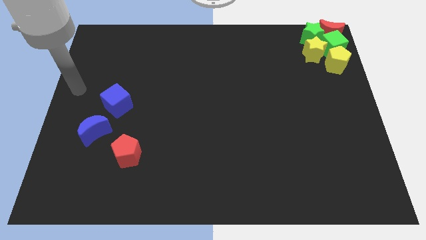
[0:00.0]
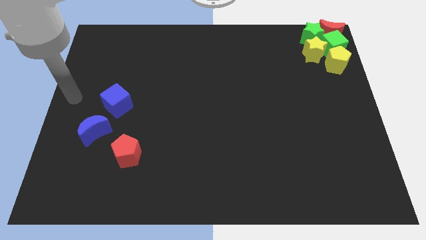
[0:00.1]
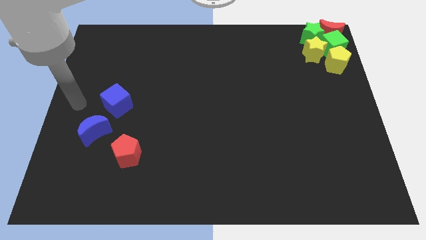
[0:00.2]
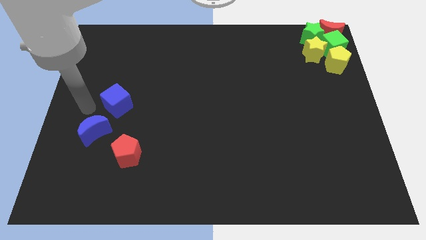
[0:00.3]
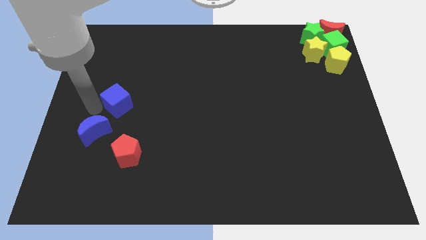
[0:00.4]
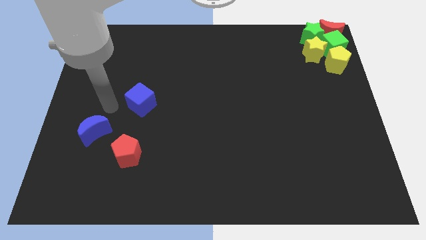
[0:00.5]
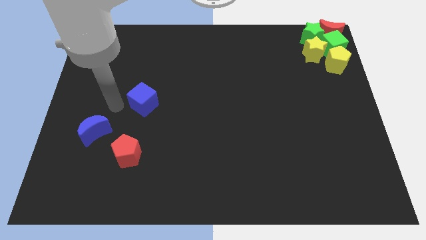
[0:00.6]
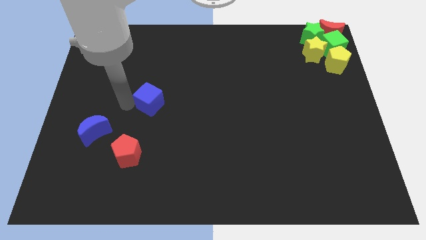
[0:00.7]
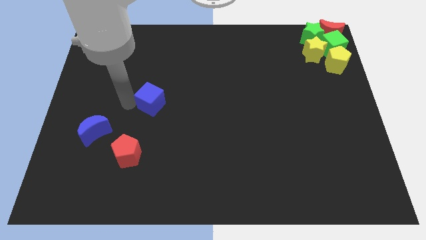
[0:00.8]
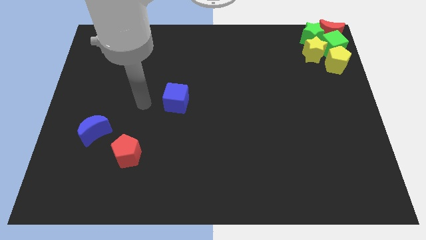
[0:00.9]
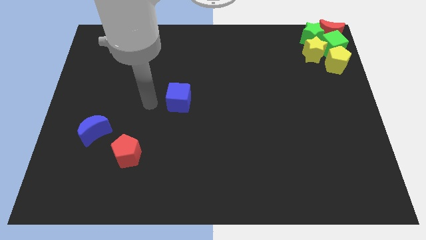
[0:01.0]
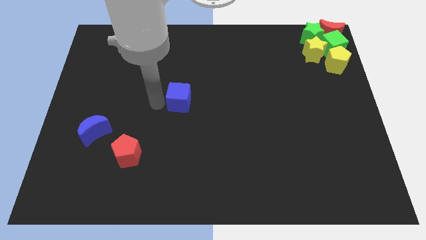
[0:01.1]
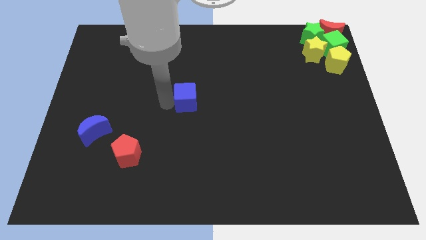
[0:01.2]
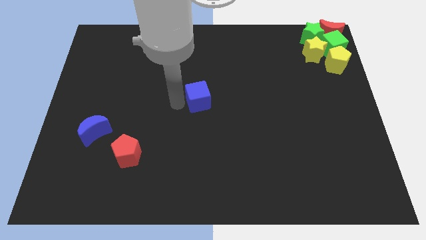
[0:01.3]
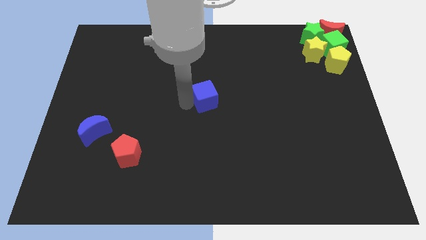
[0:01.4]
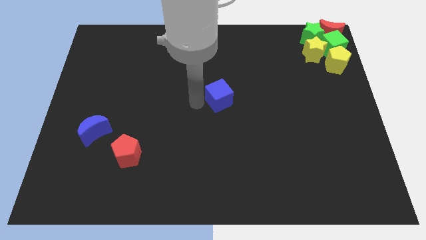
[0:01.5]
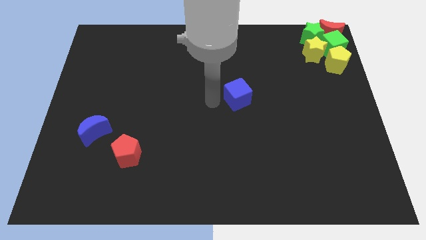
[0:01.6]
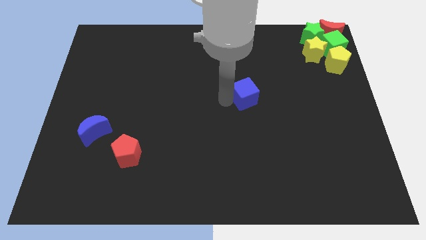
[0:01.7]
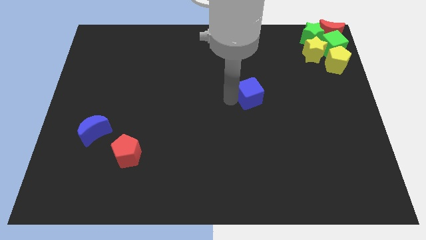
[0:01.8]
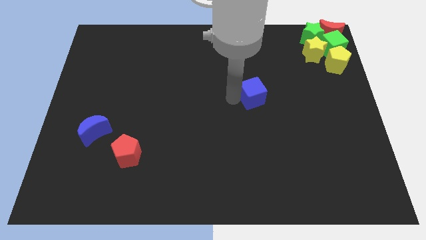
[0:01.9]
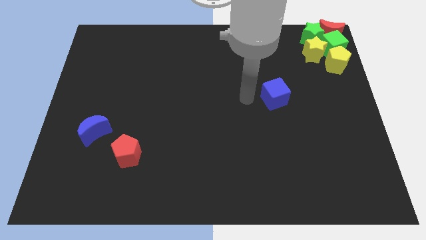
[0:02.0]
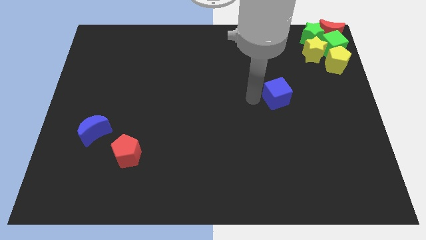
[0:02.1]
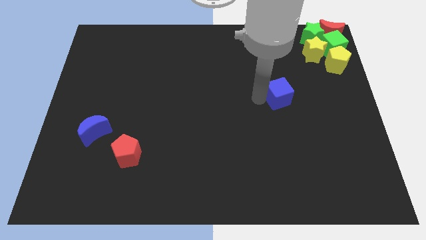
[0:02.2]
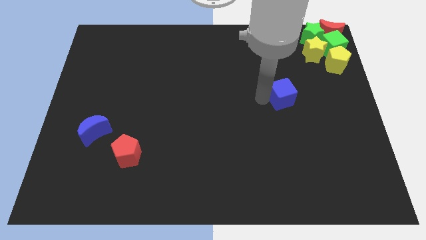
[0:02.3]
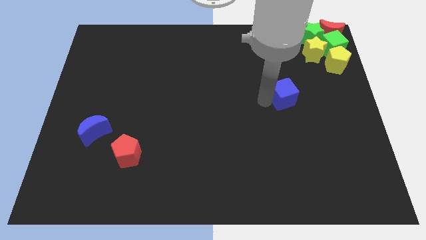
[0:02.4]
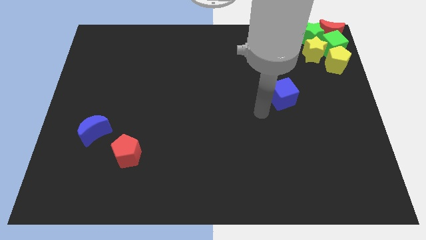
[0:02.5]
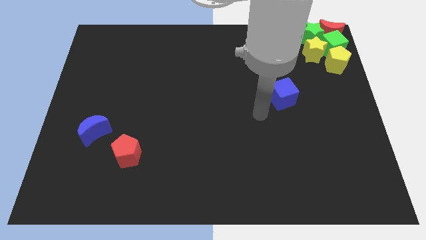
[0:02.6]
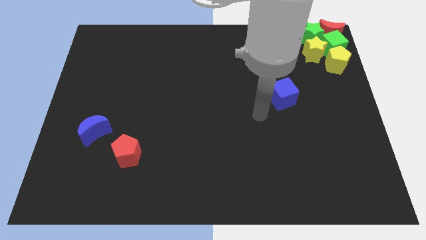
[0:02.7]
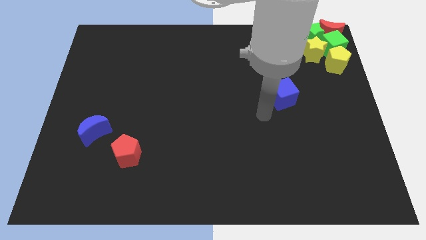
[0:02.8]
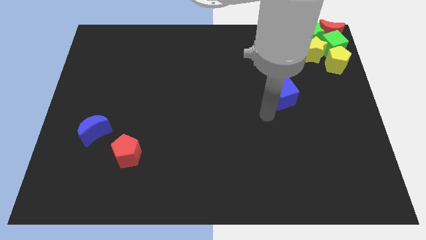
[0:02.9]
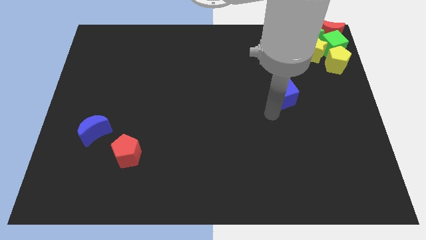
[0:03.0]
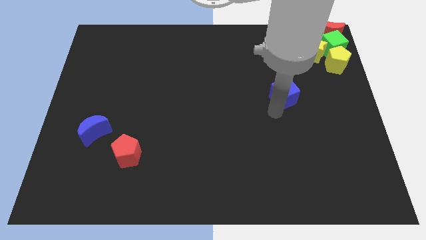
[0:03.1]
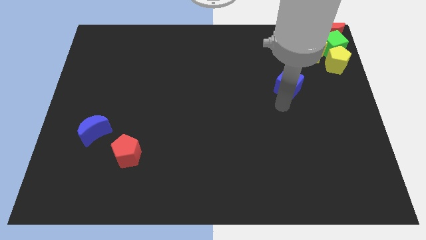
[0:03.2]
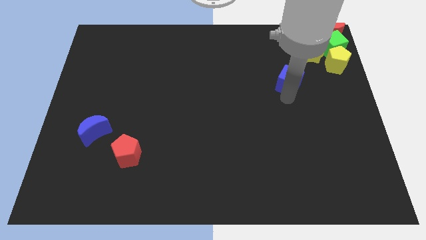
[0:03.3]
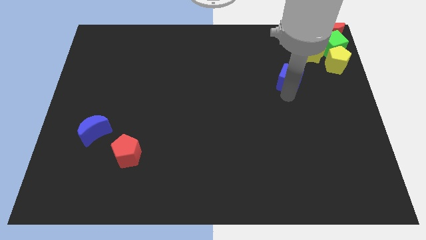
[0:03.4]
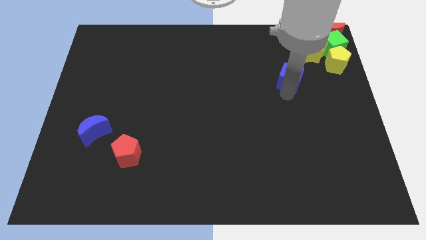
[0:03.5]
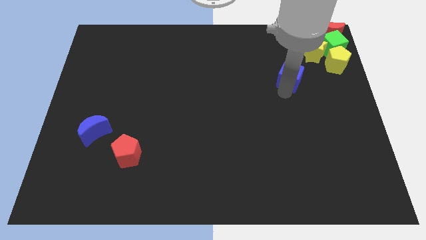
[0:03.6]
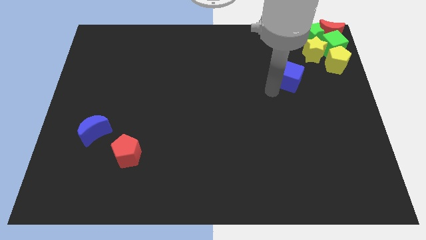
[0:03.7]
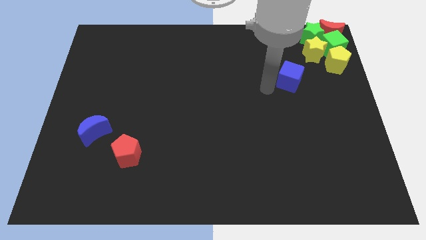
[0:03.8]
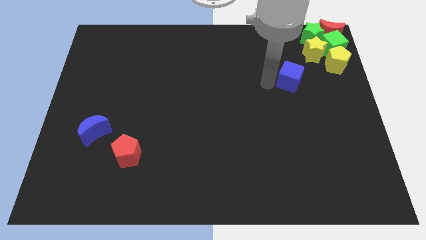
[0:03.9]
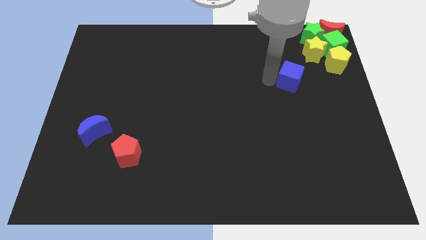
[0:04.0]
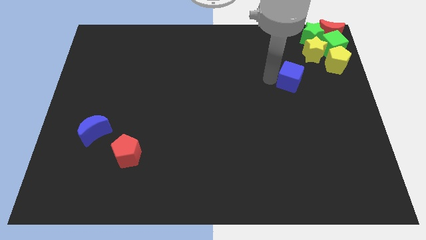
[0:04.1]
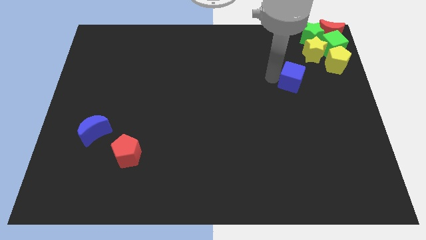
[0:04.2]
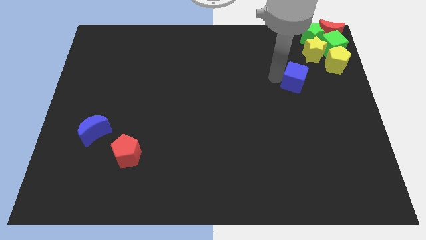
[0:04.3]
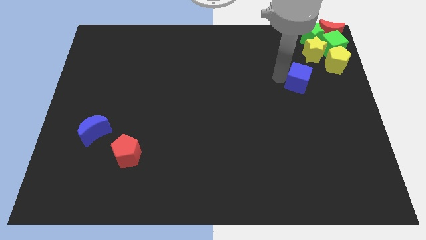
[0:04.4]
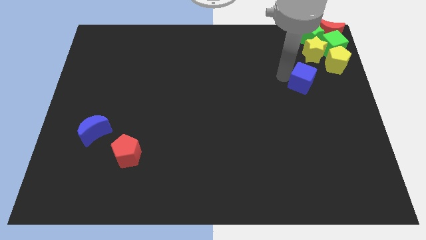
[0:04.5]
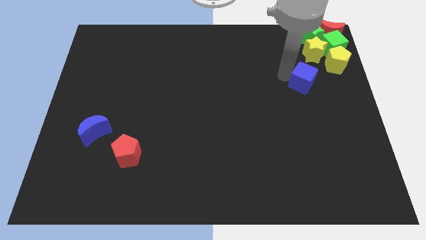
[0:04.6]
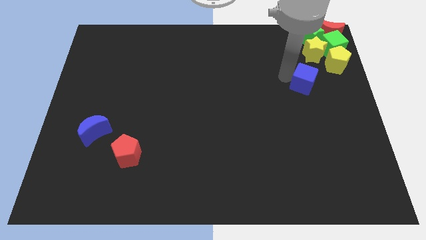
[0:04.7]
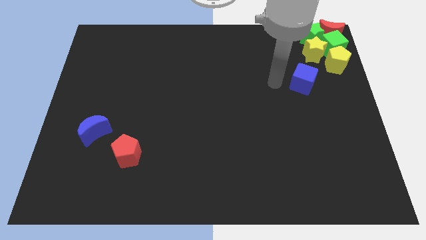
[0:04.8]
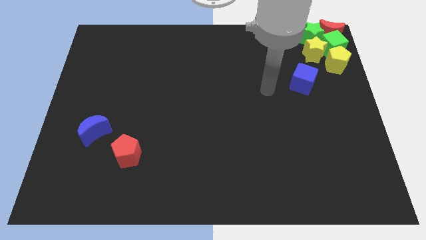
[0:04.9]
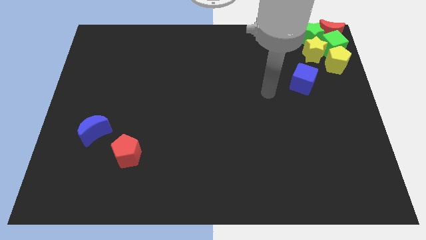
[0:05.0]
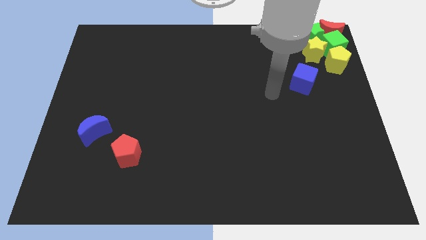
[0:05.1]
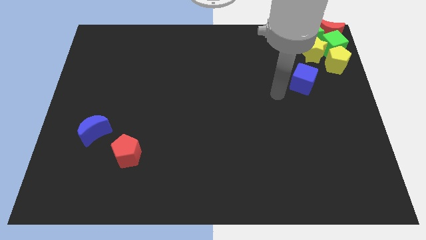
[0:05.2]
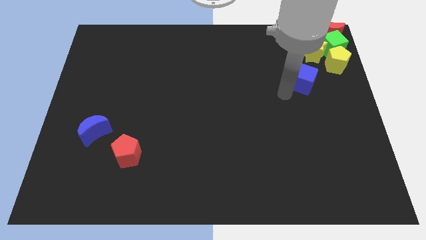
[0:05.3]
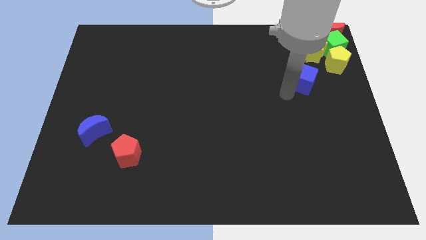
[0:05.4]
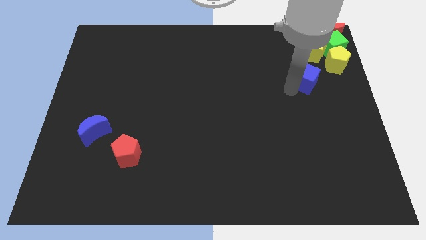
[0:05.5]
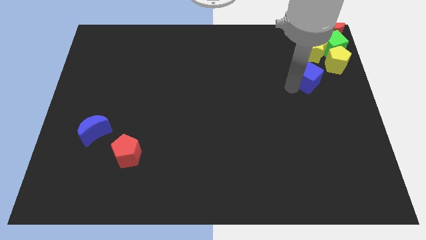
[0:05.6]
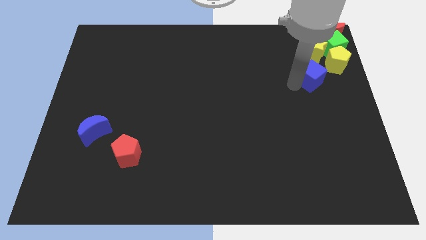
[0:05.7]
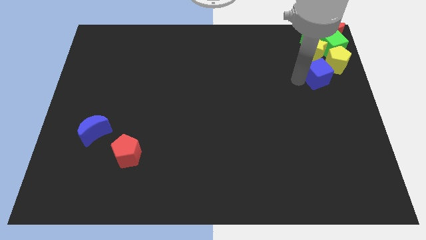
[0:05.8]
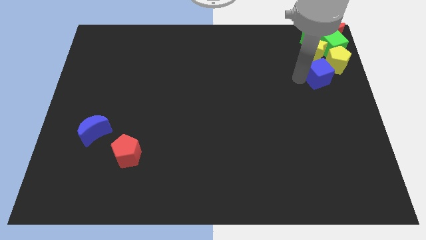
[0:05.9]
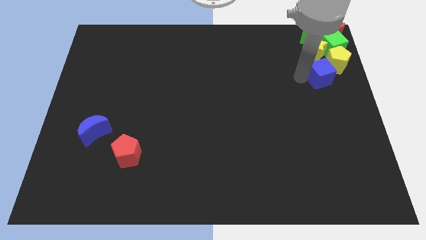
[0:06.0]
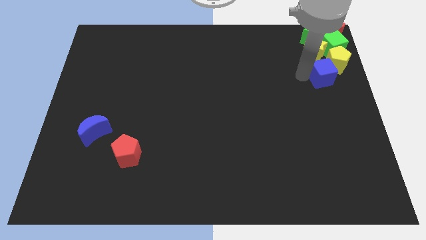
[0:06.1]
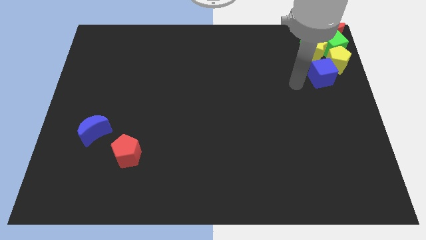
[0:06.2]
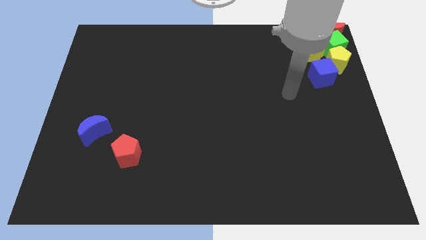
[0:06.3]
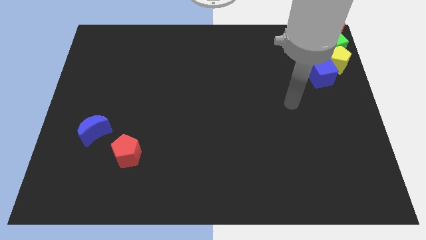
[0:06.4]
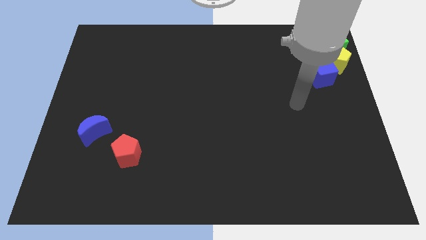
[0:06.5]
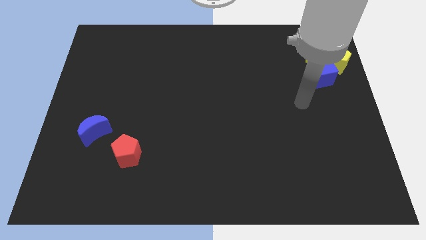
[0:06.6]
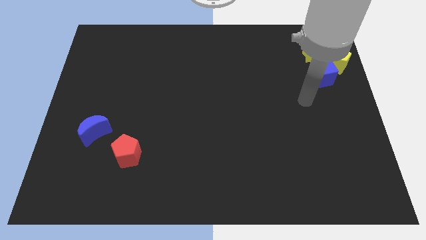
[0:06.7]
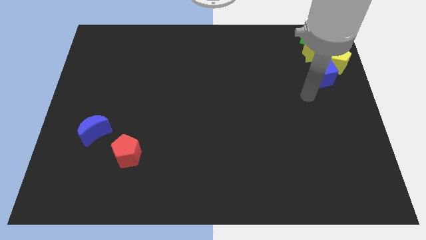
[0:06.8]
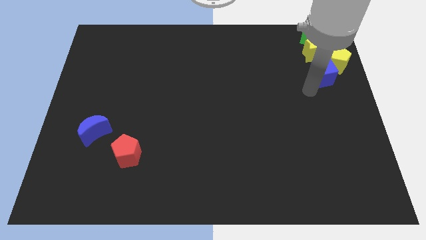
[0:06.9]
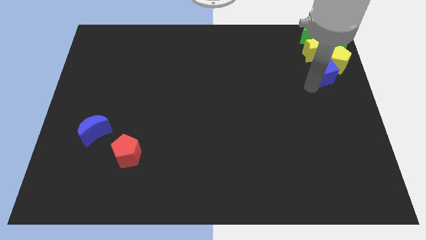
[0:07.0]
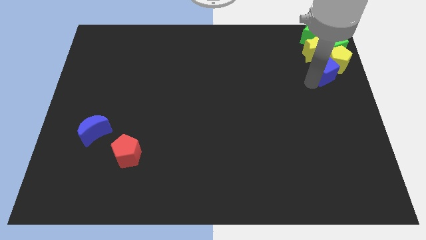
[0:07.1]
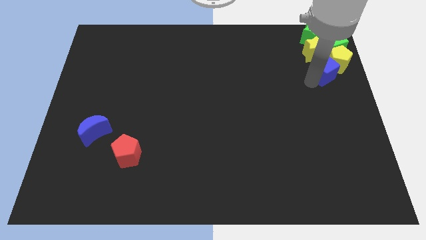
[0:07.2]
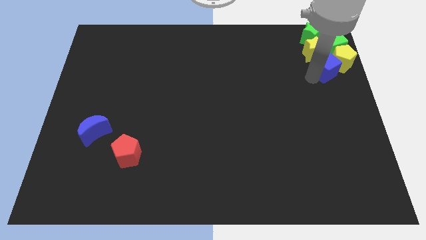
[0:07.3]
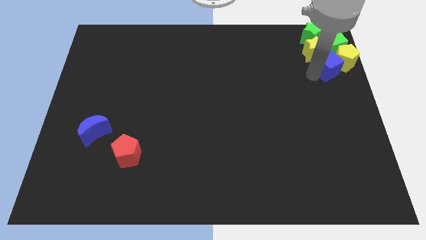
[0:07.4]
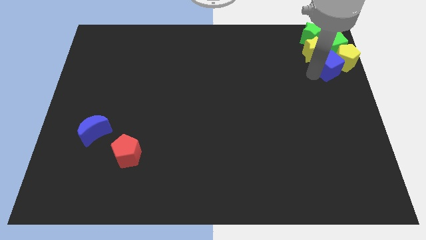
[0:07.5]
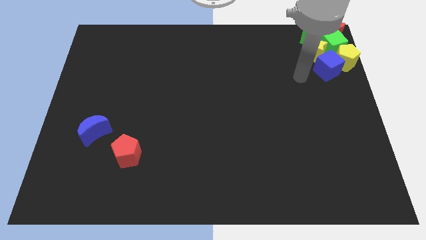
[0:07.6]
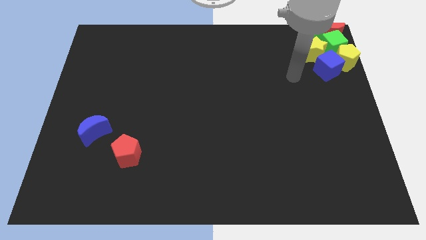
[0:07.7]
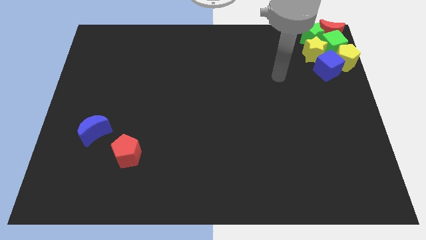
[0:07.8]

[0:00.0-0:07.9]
push the blue cube into the yellow pentagon

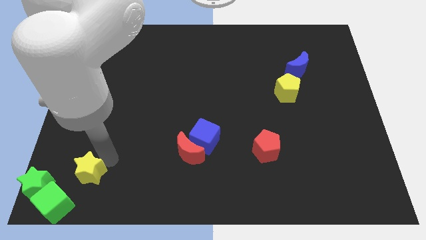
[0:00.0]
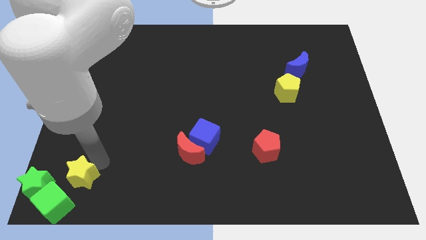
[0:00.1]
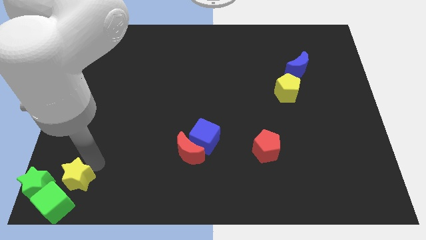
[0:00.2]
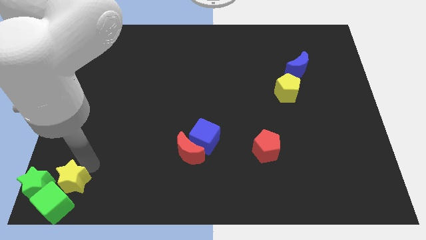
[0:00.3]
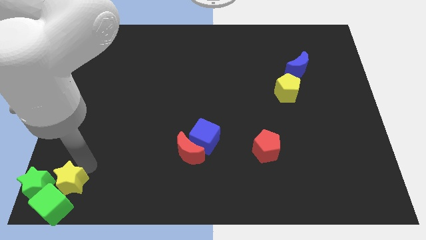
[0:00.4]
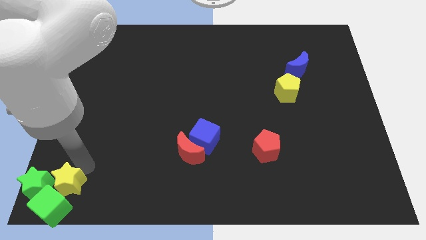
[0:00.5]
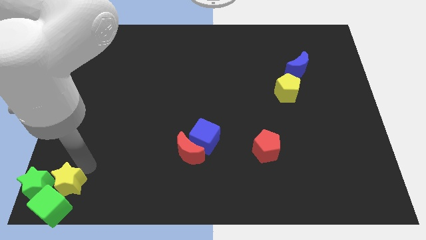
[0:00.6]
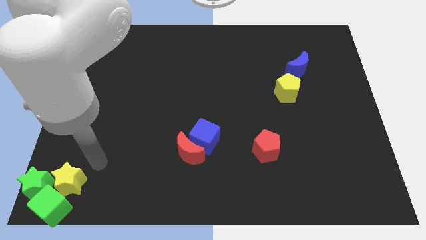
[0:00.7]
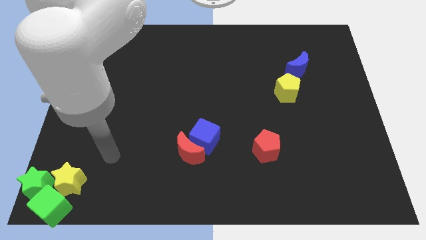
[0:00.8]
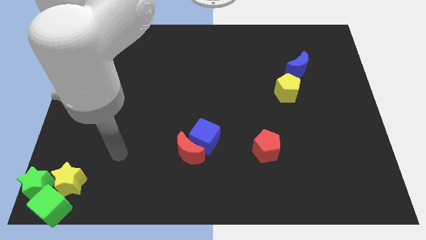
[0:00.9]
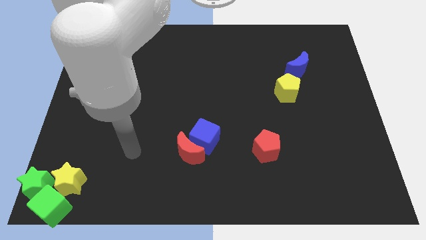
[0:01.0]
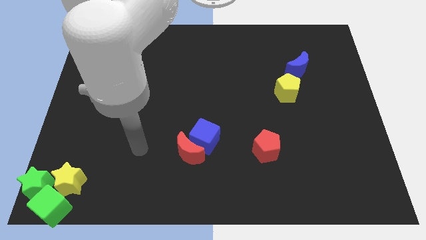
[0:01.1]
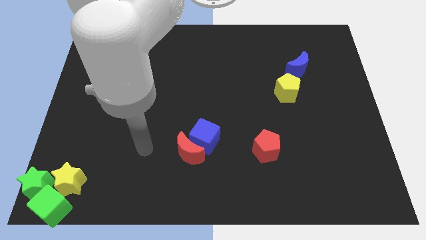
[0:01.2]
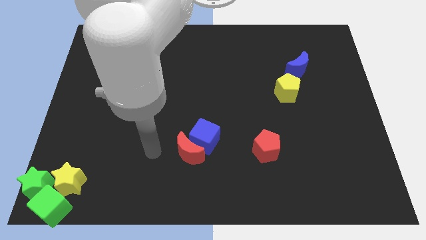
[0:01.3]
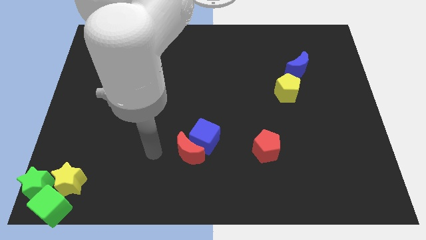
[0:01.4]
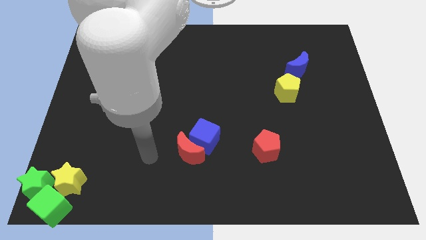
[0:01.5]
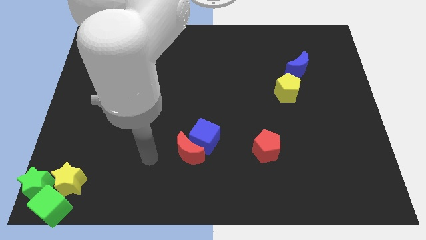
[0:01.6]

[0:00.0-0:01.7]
push the yellow star into the green cube
